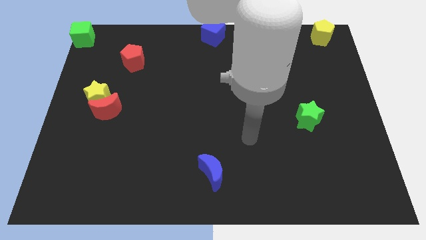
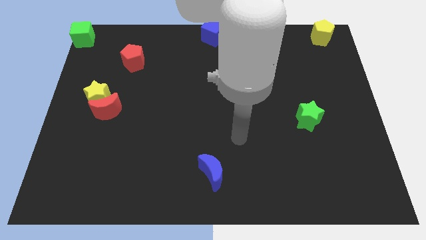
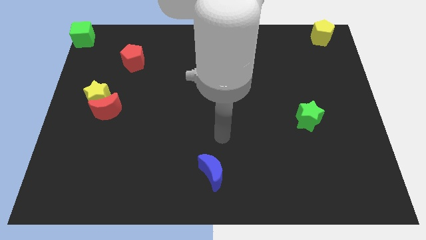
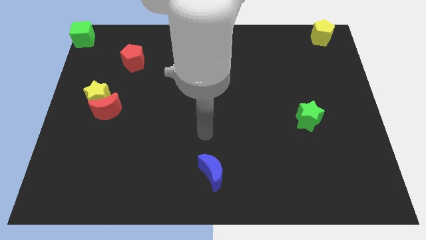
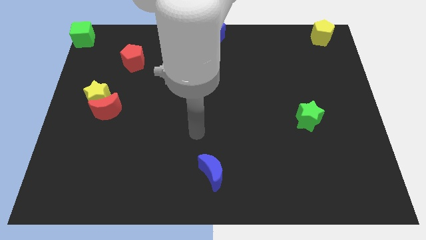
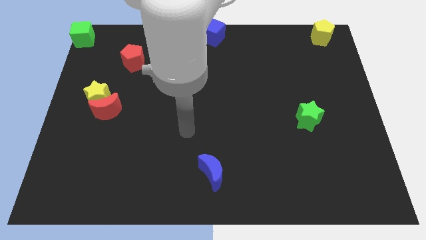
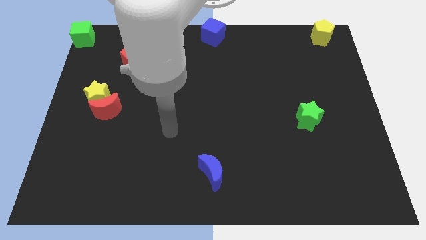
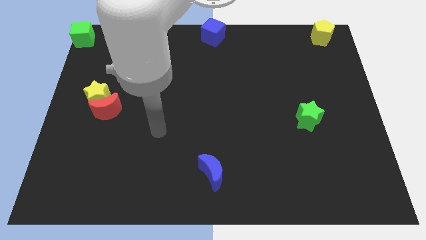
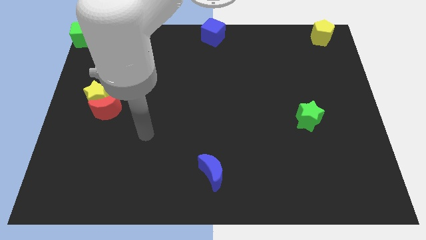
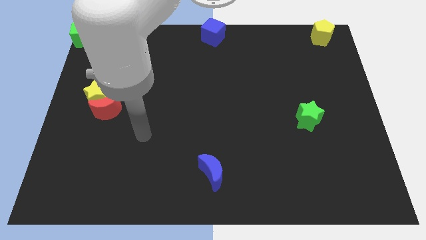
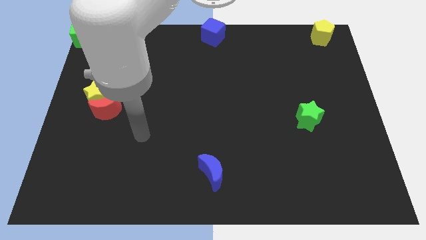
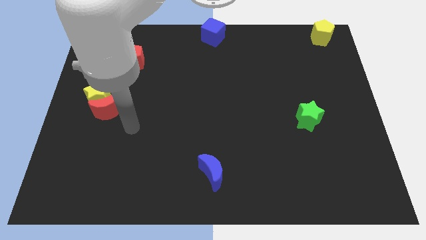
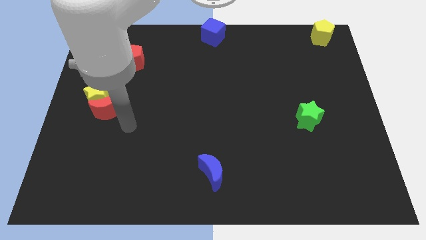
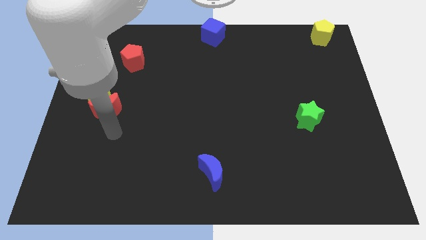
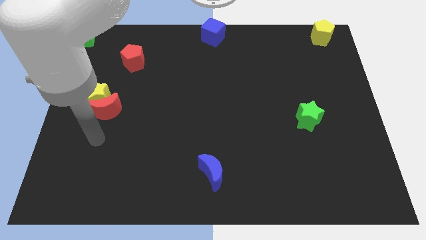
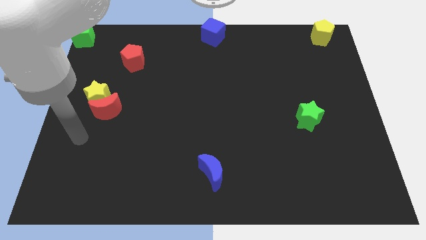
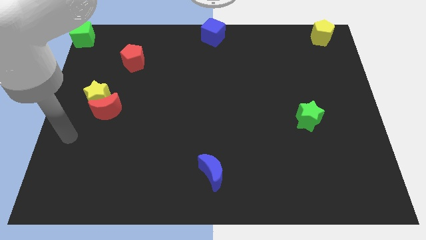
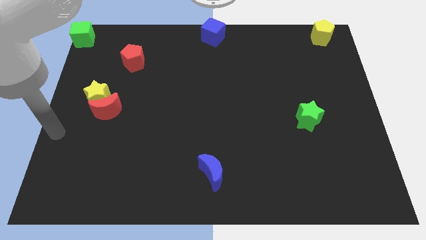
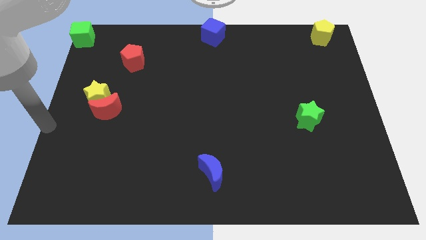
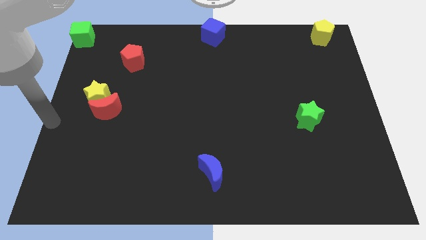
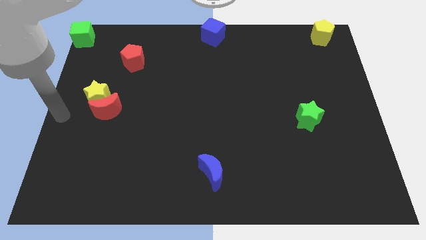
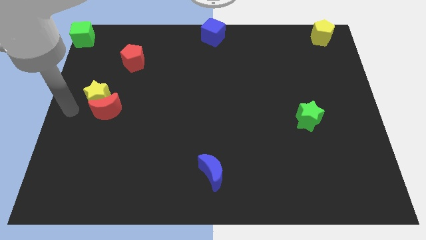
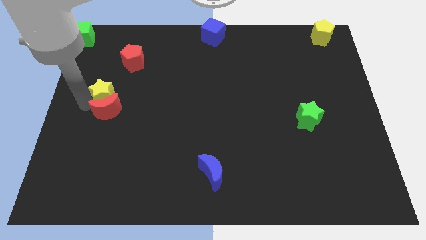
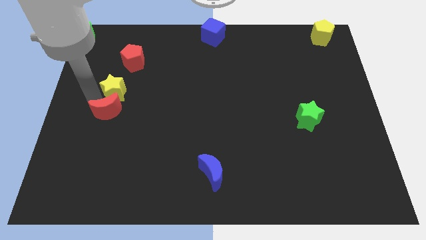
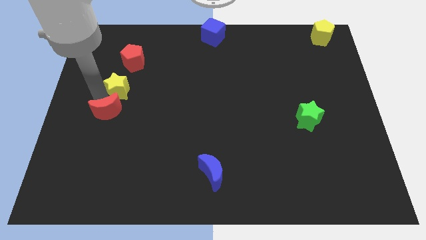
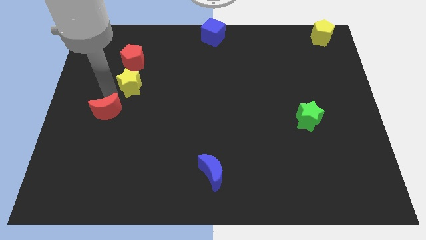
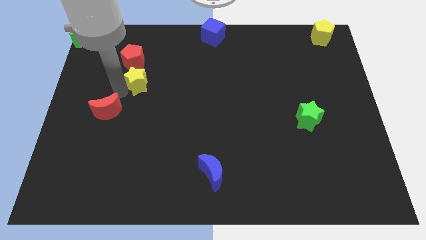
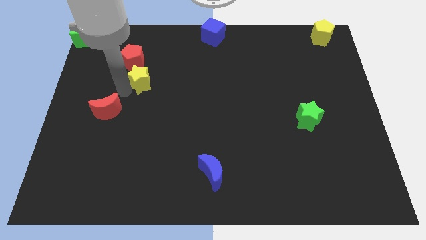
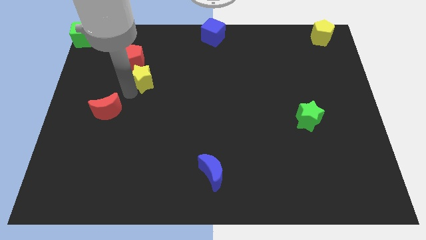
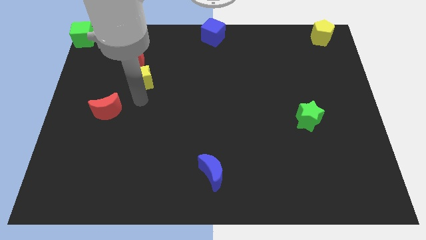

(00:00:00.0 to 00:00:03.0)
go and separate the yellow star and the red crescent

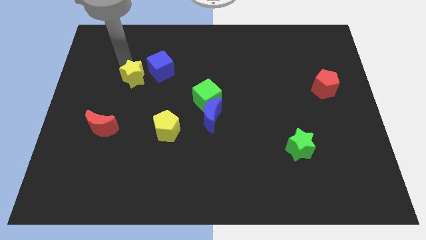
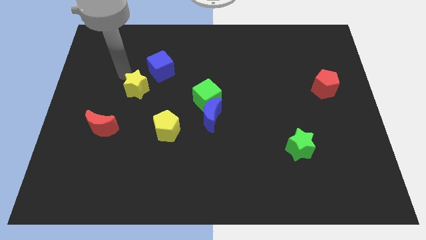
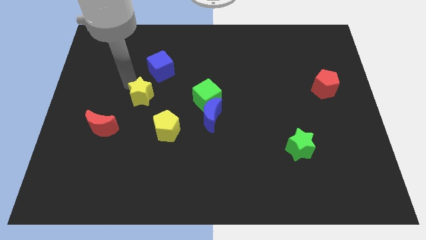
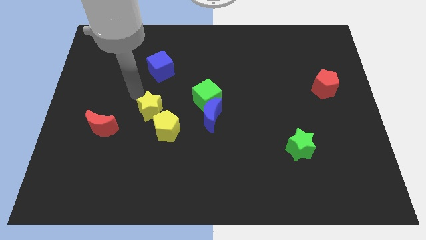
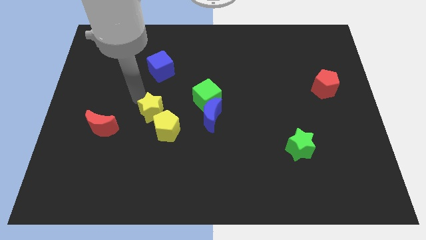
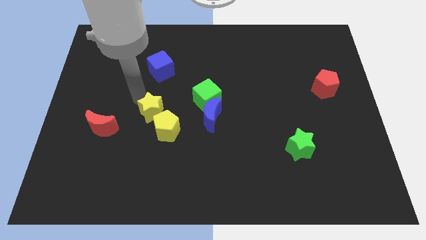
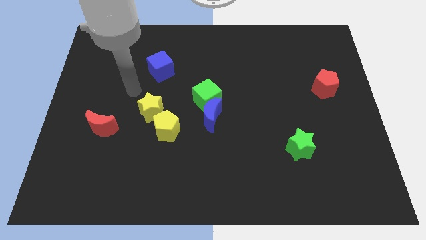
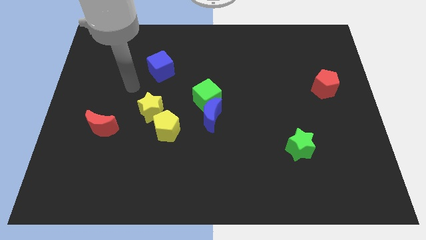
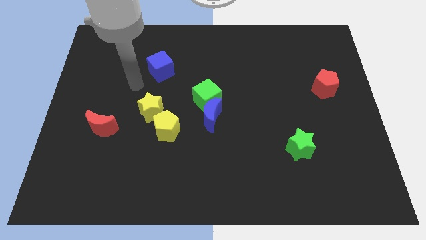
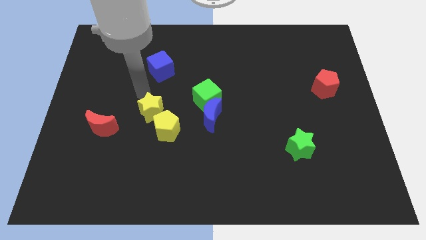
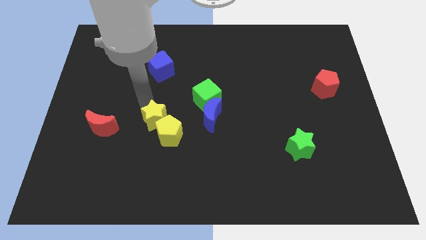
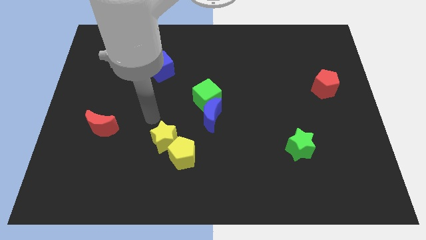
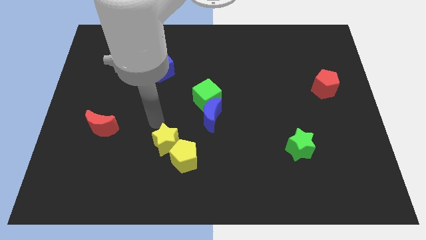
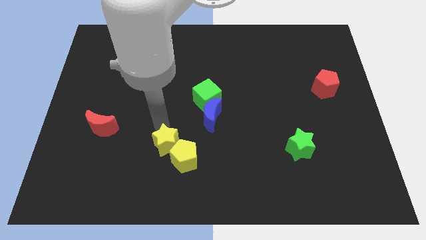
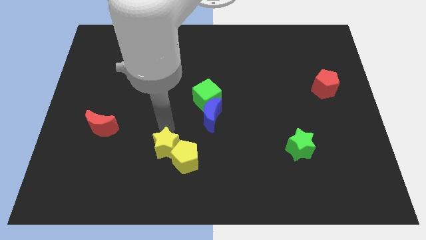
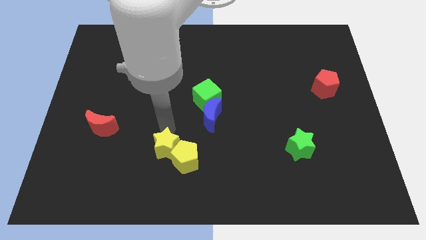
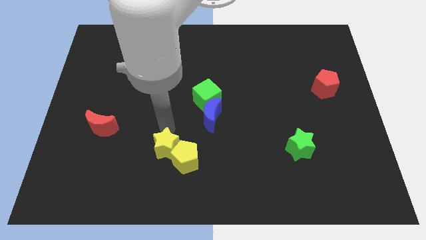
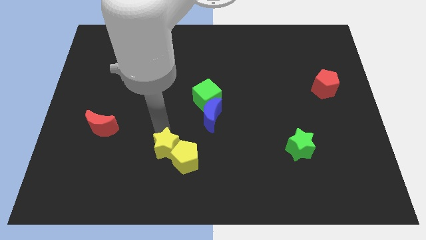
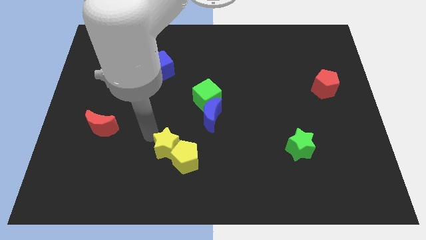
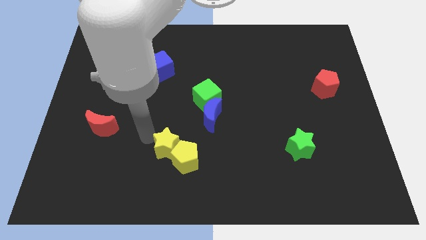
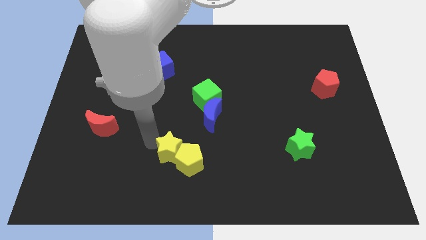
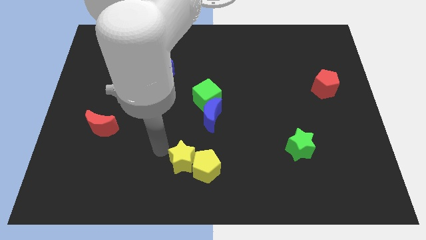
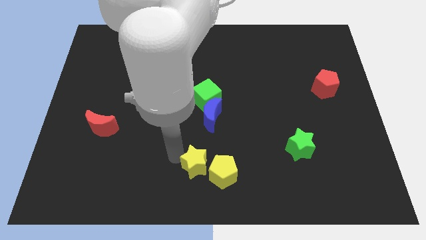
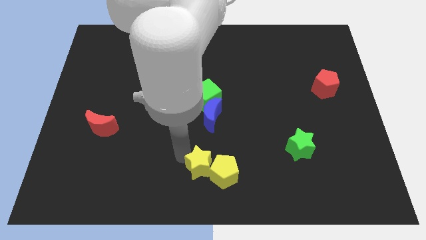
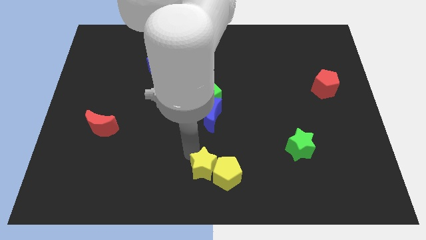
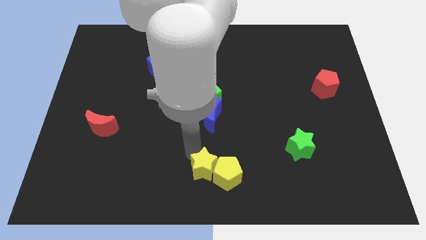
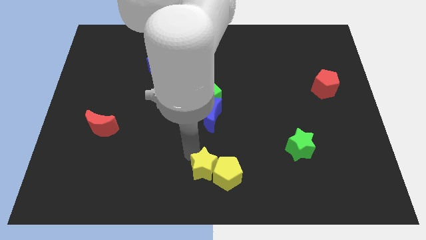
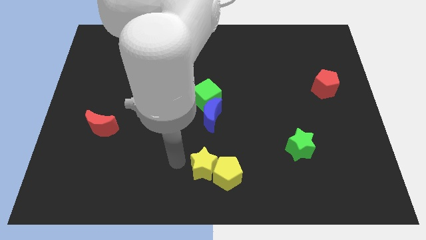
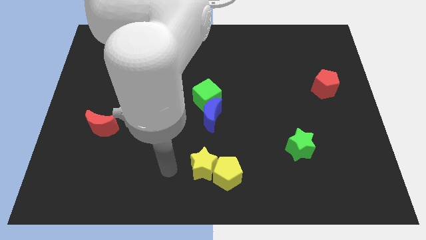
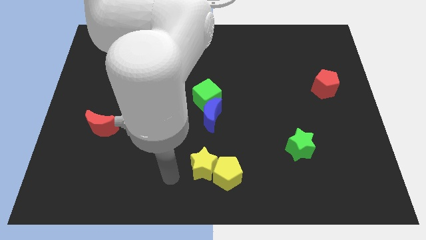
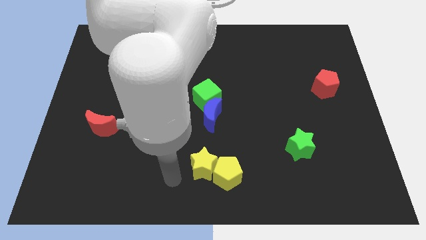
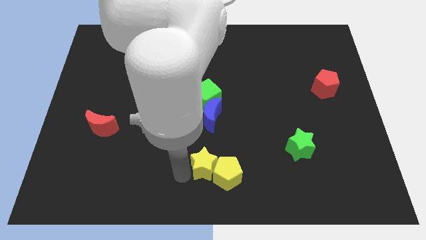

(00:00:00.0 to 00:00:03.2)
slide the yellow star and the yellow pentagon below the blue moon

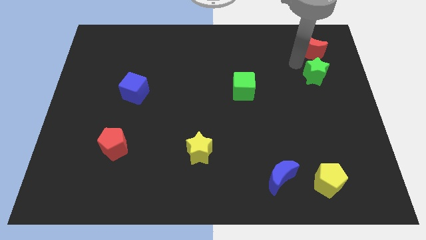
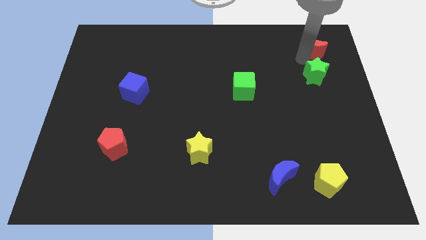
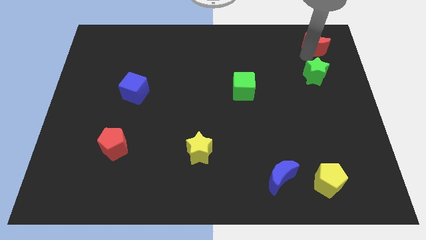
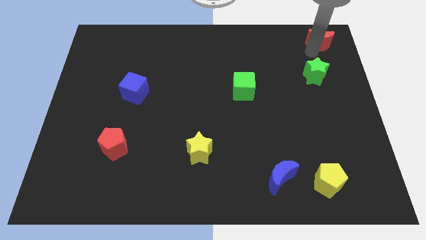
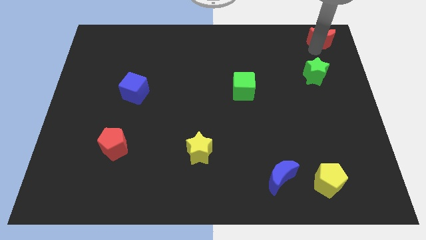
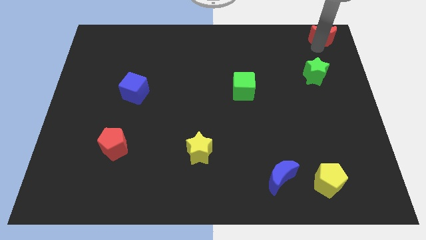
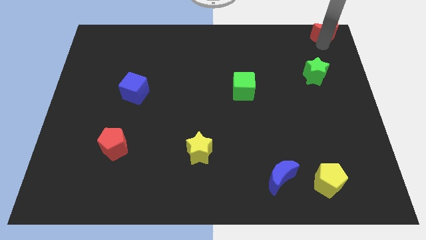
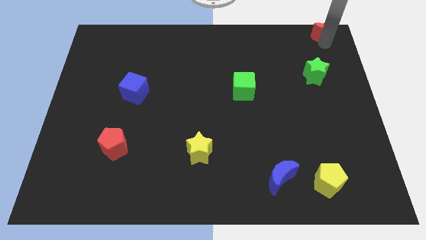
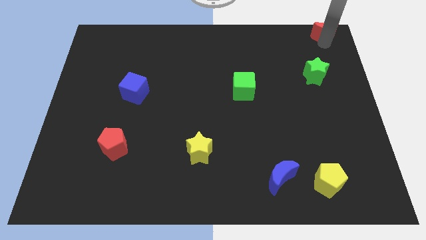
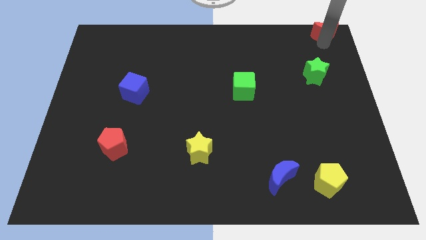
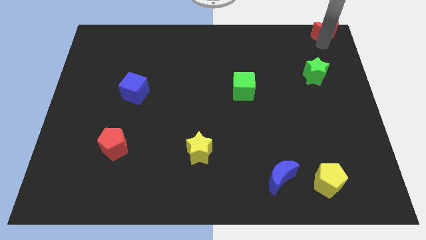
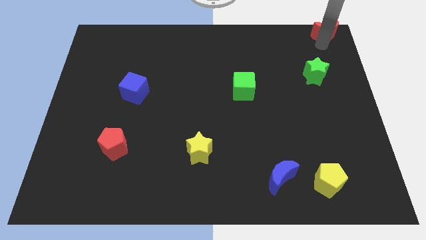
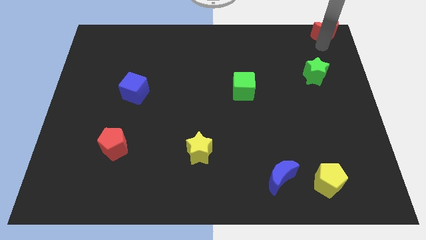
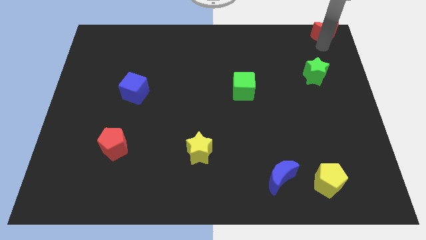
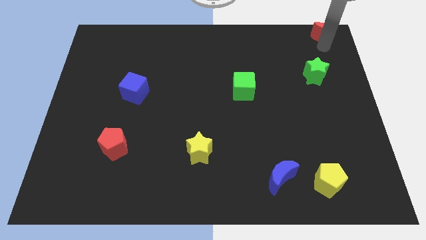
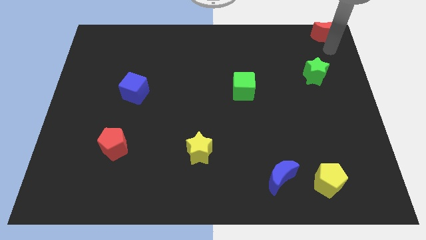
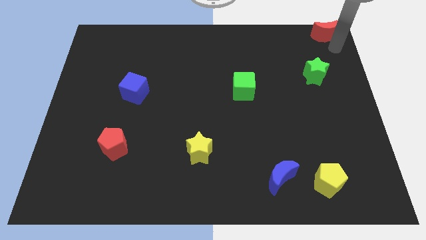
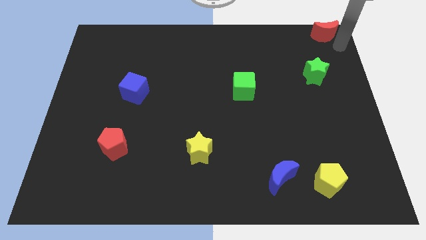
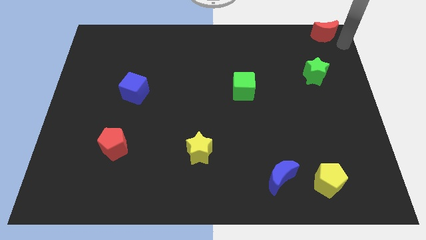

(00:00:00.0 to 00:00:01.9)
push the red moon to the top right corner

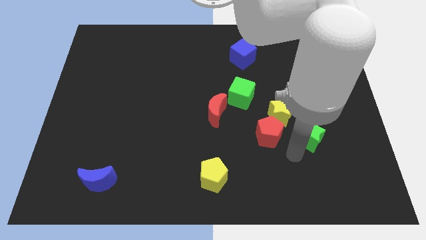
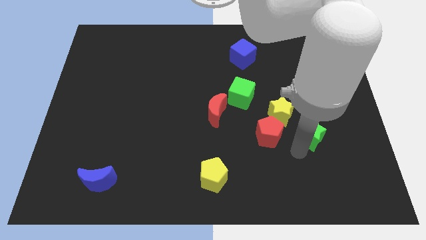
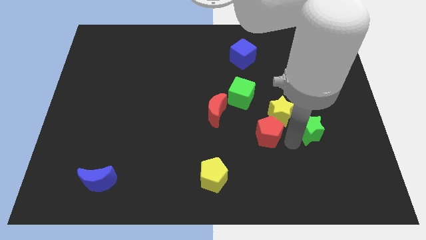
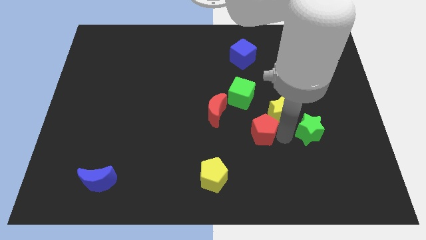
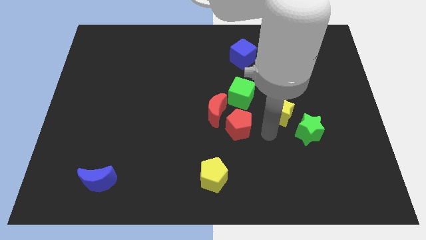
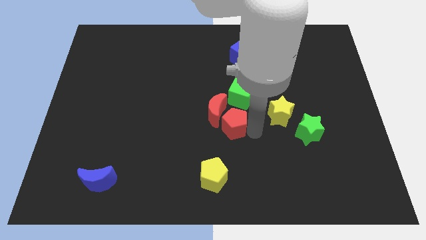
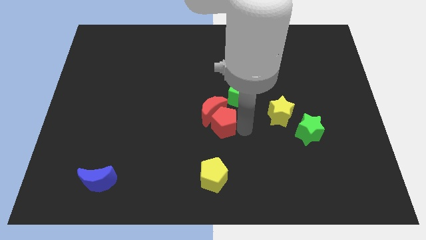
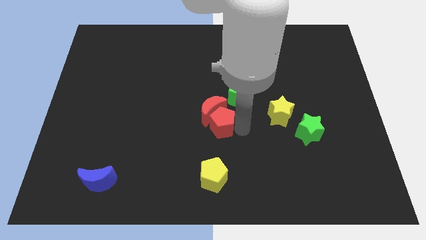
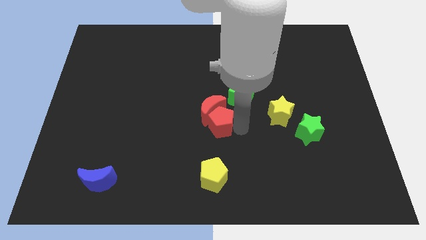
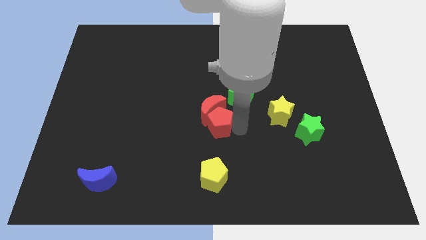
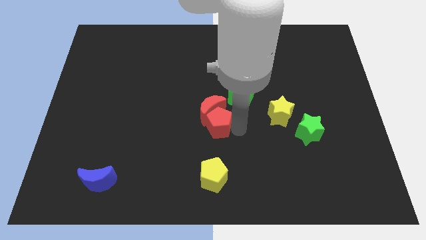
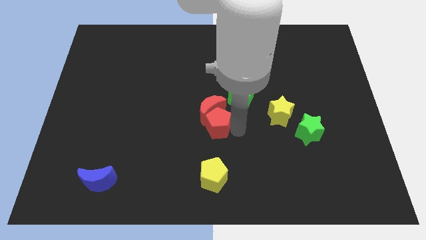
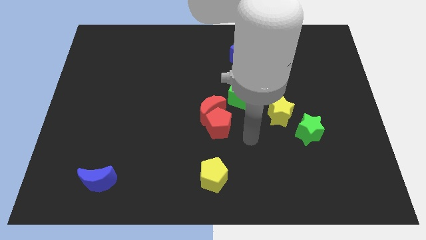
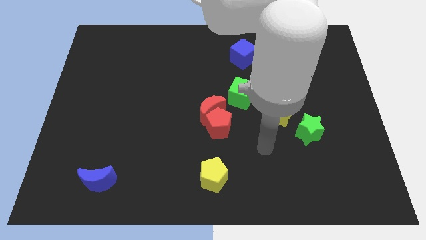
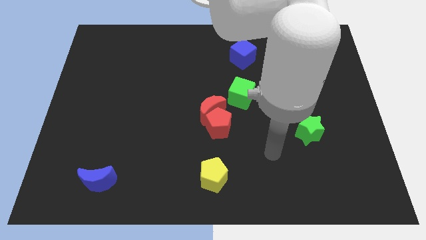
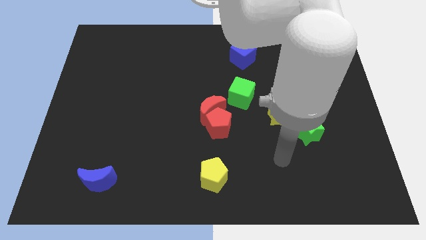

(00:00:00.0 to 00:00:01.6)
push the red pentagon into the red moon
